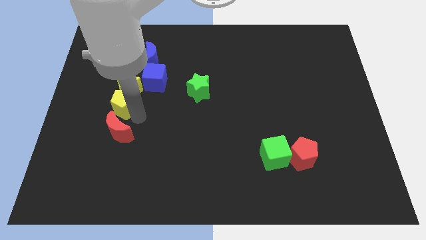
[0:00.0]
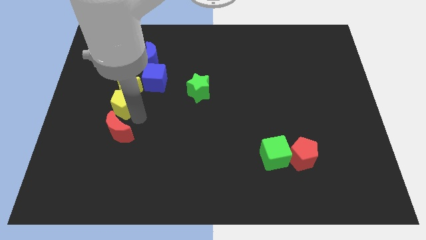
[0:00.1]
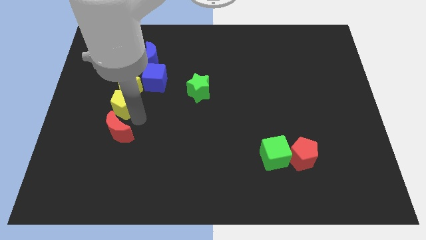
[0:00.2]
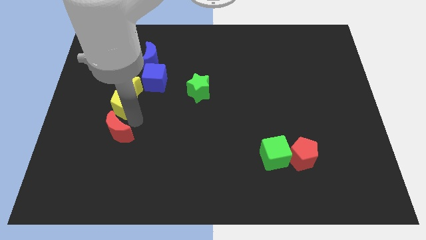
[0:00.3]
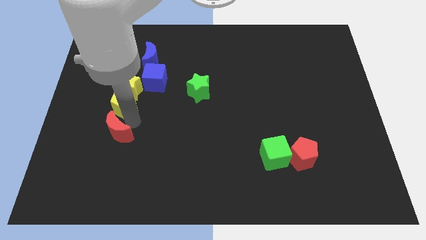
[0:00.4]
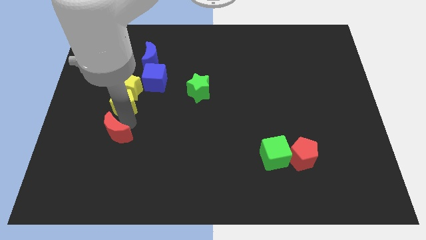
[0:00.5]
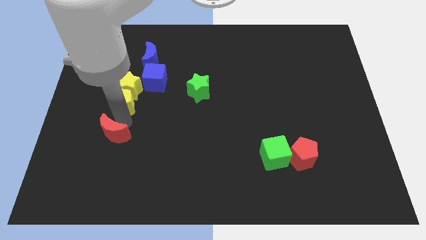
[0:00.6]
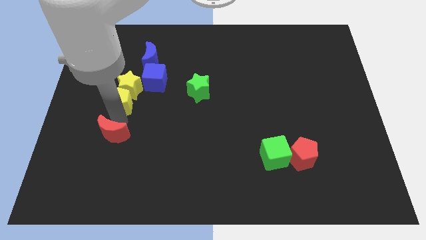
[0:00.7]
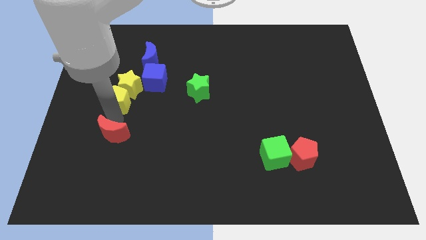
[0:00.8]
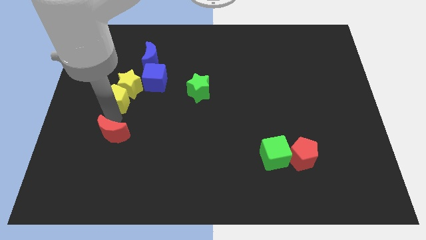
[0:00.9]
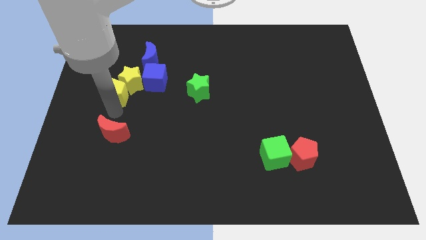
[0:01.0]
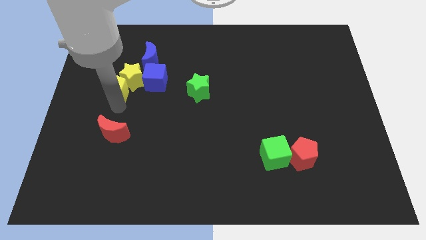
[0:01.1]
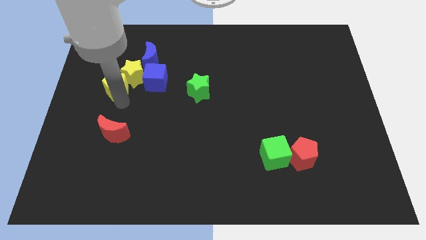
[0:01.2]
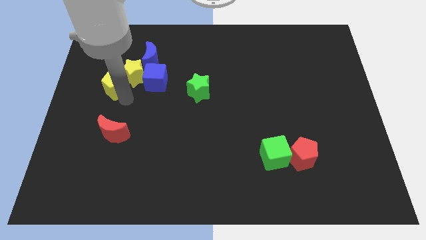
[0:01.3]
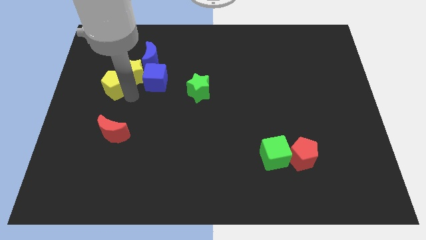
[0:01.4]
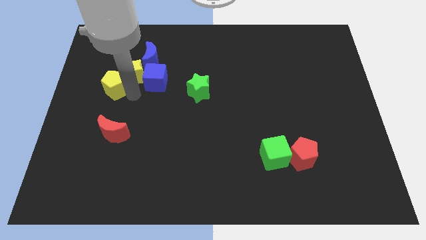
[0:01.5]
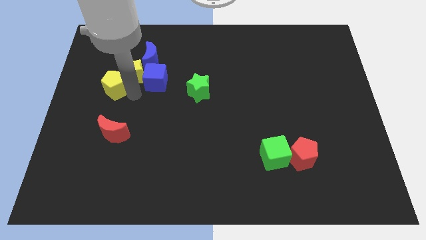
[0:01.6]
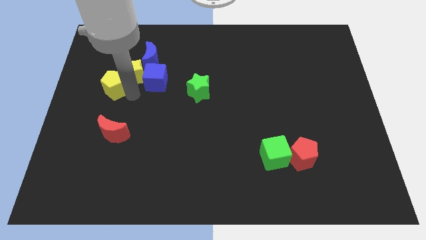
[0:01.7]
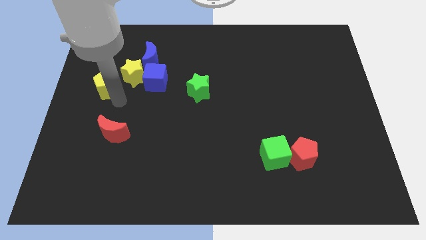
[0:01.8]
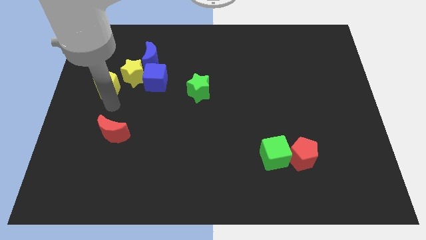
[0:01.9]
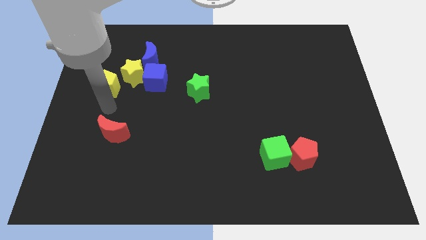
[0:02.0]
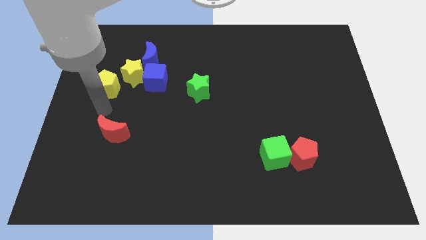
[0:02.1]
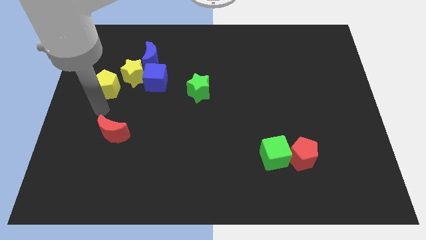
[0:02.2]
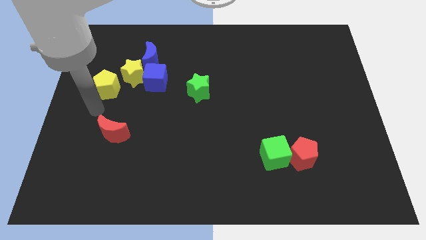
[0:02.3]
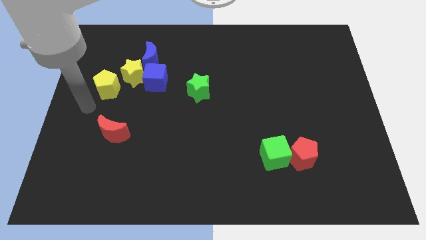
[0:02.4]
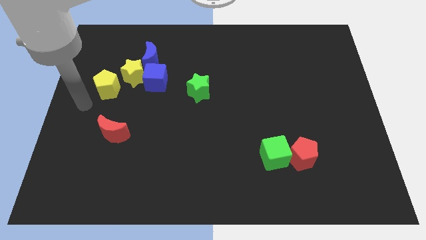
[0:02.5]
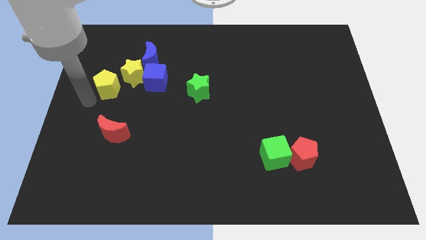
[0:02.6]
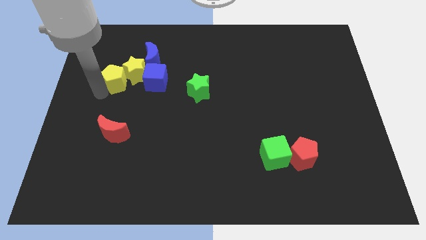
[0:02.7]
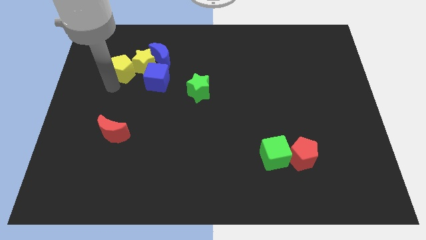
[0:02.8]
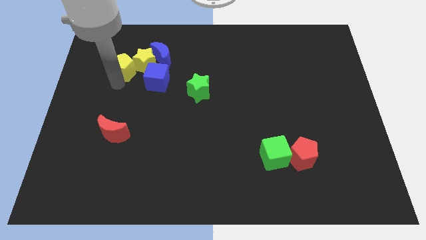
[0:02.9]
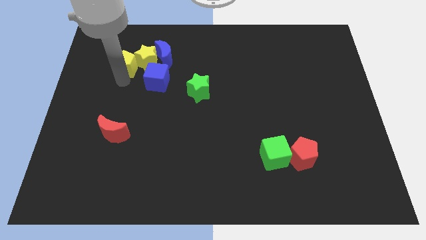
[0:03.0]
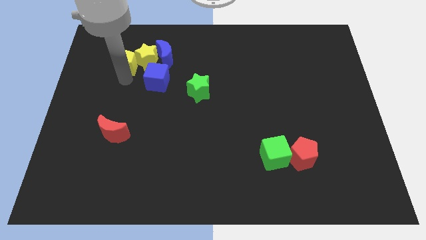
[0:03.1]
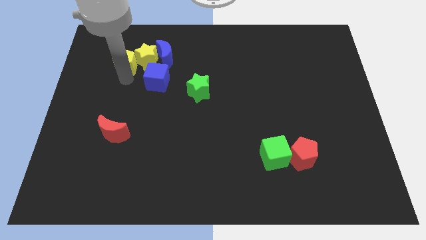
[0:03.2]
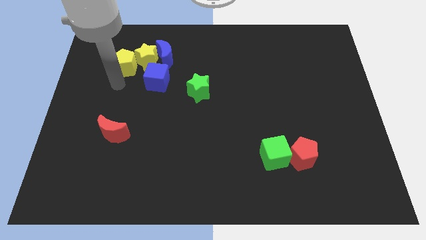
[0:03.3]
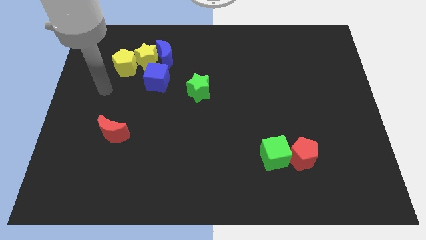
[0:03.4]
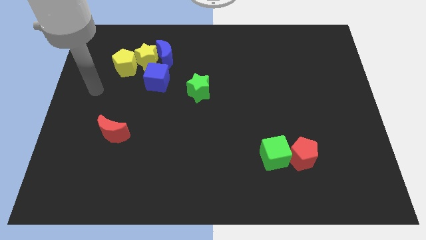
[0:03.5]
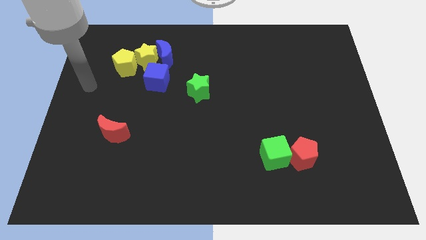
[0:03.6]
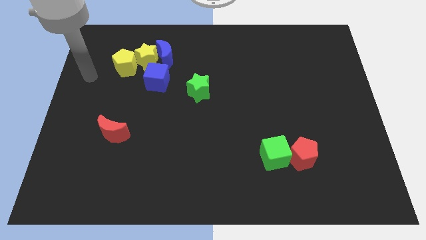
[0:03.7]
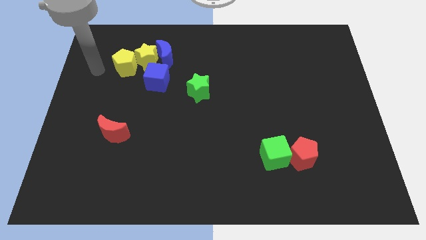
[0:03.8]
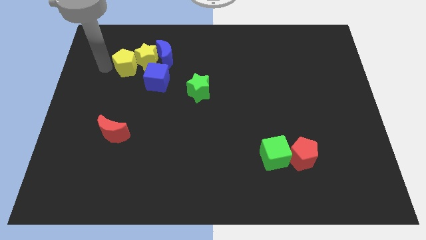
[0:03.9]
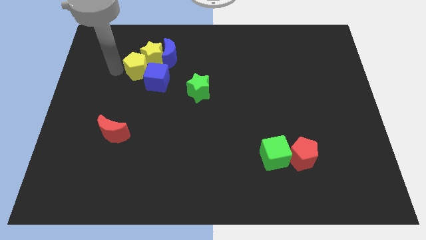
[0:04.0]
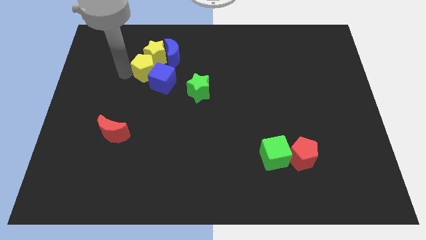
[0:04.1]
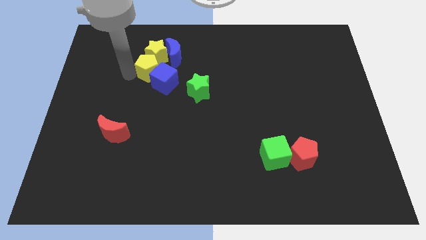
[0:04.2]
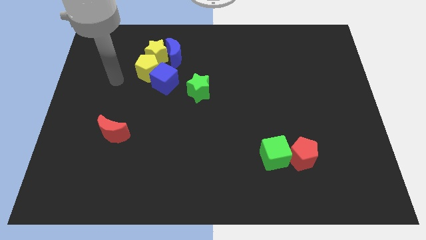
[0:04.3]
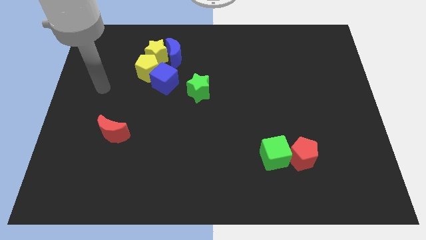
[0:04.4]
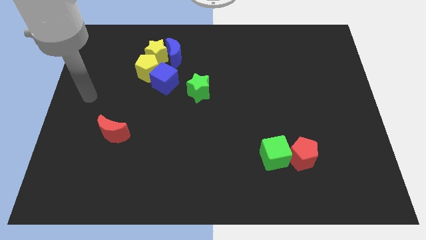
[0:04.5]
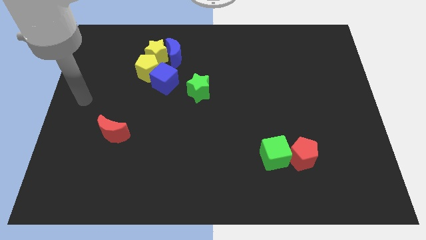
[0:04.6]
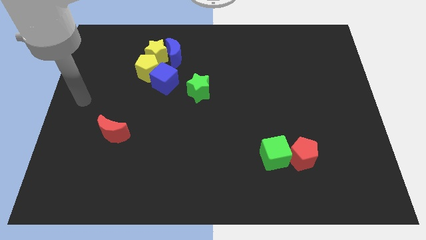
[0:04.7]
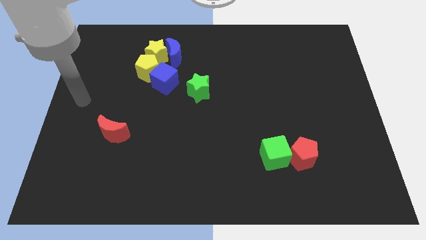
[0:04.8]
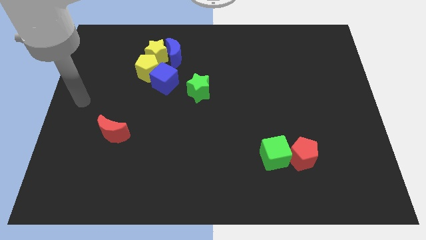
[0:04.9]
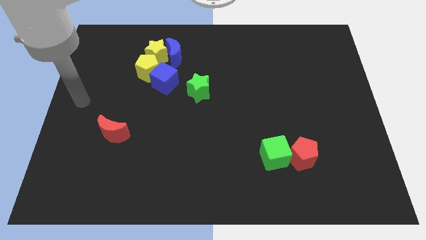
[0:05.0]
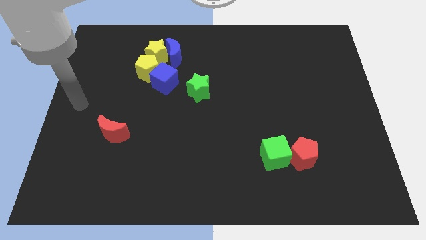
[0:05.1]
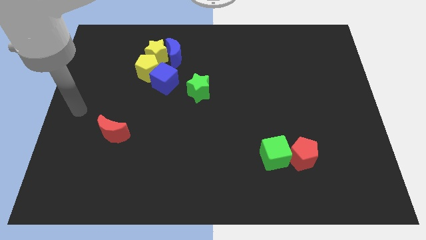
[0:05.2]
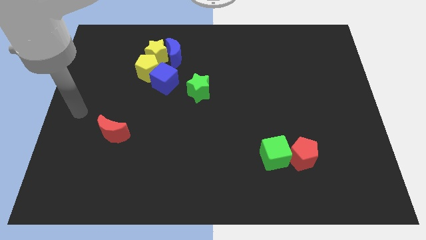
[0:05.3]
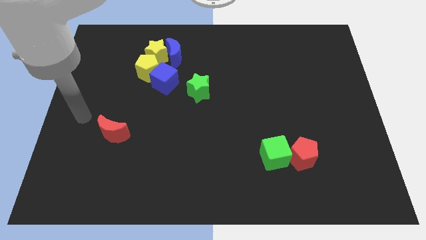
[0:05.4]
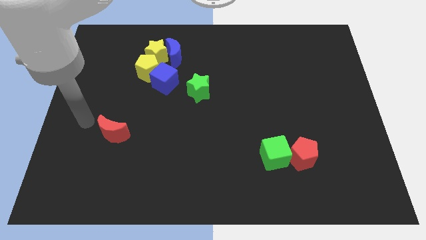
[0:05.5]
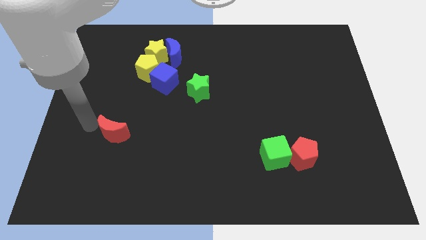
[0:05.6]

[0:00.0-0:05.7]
move the yellow blocks into the blue blocks

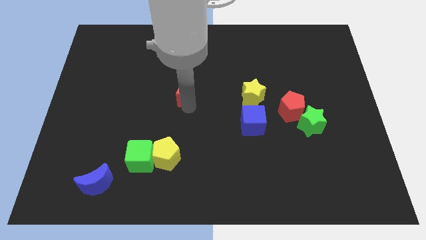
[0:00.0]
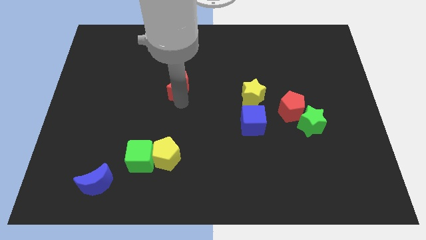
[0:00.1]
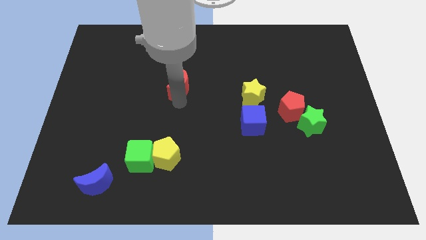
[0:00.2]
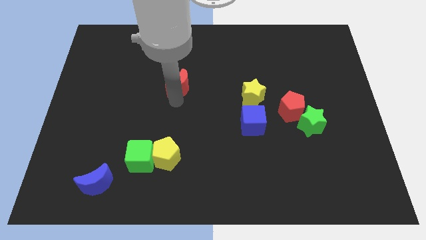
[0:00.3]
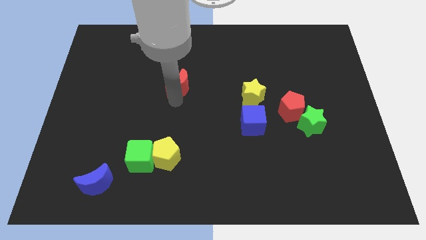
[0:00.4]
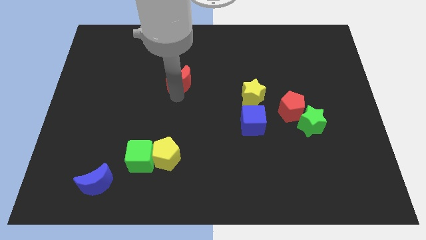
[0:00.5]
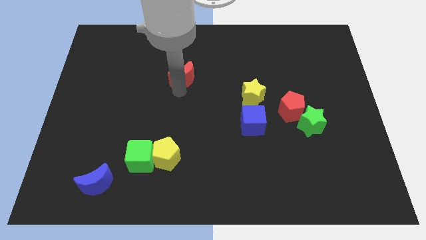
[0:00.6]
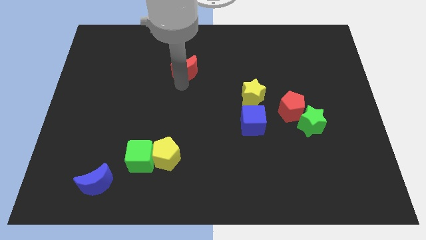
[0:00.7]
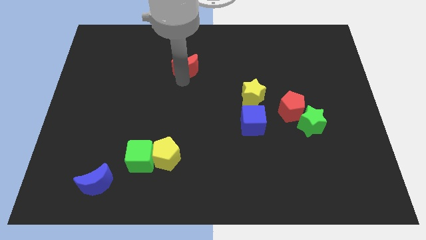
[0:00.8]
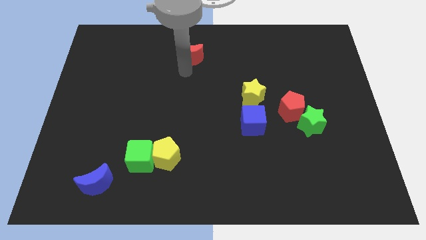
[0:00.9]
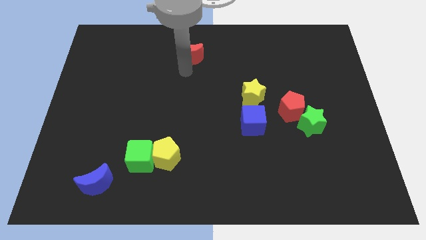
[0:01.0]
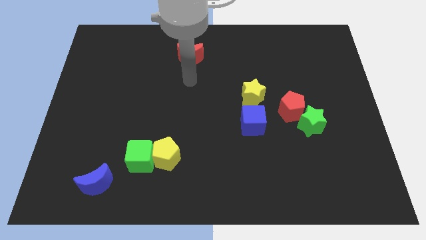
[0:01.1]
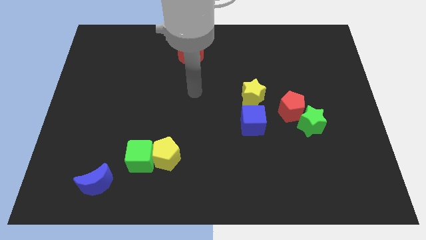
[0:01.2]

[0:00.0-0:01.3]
move the red moon towards the top side of the board

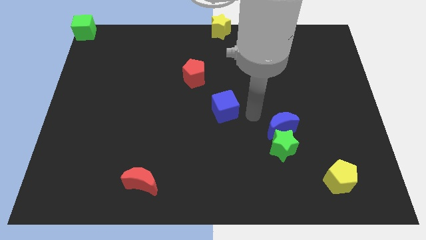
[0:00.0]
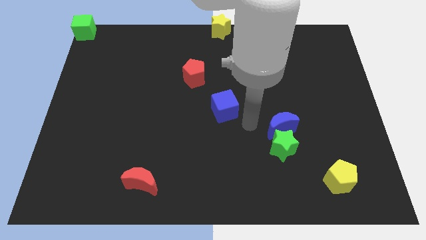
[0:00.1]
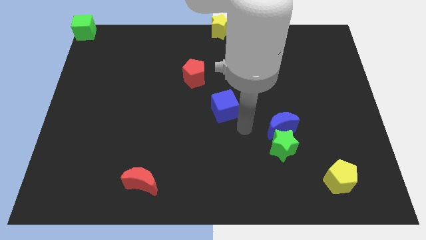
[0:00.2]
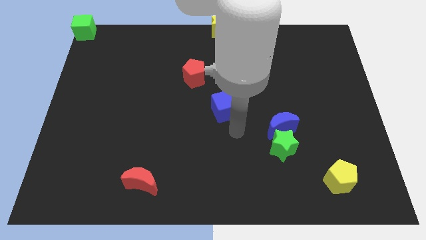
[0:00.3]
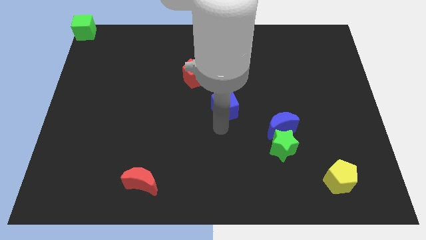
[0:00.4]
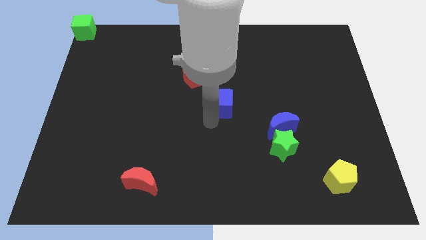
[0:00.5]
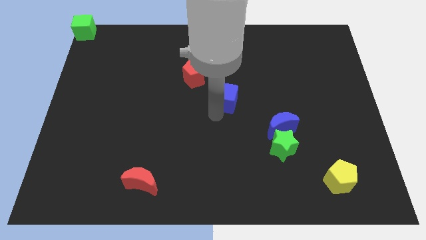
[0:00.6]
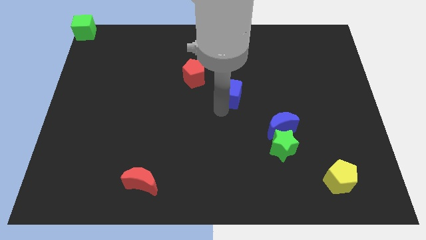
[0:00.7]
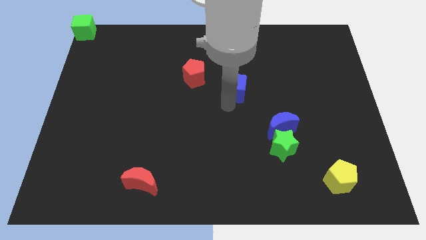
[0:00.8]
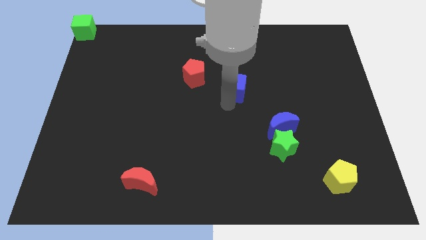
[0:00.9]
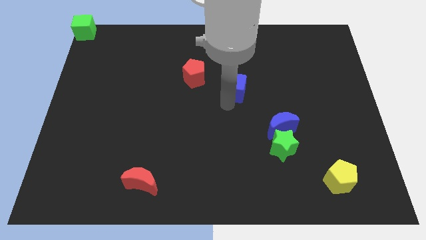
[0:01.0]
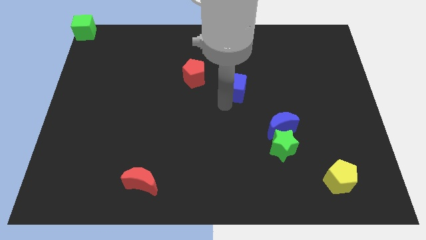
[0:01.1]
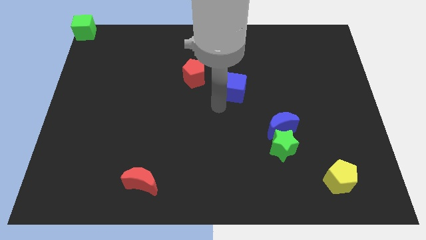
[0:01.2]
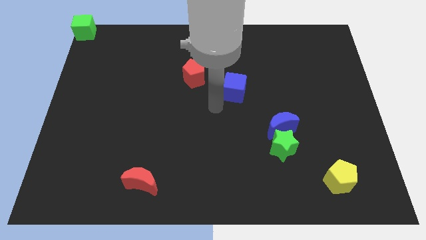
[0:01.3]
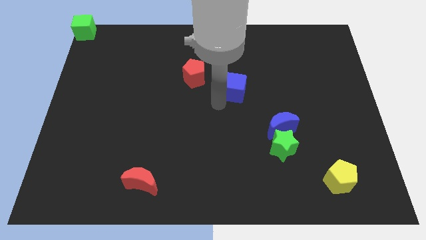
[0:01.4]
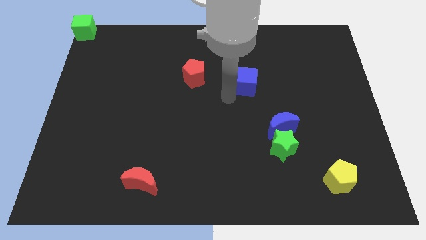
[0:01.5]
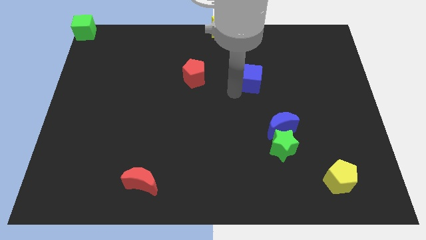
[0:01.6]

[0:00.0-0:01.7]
place the blue cube to the right of the red pentagon

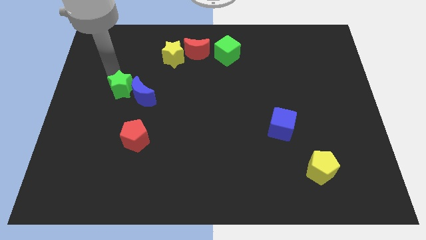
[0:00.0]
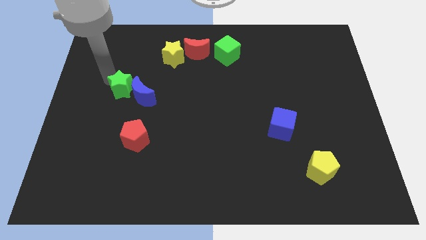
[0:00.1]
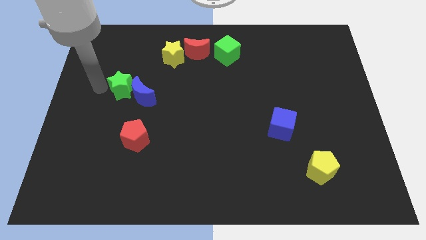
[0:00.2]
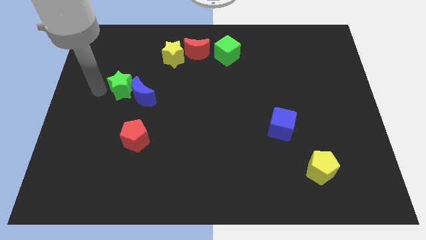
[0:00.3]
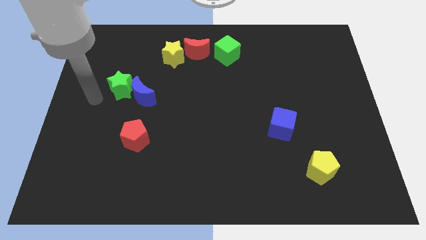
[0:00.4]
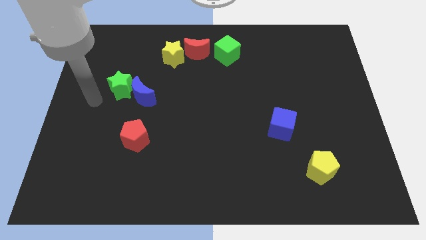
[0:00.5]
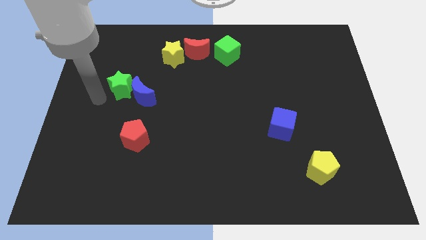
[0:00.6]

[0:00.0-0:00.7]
touch the green star slightly to the left
